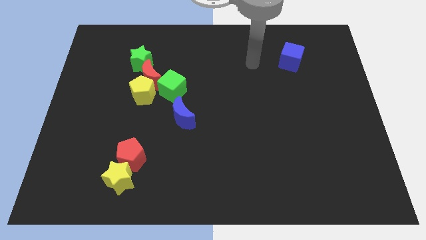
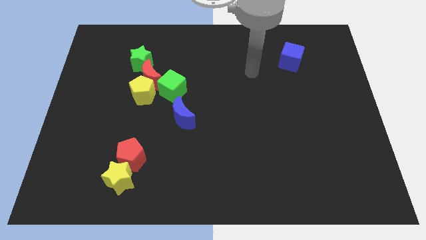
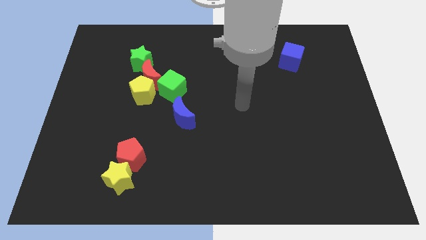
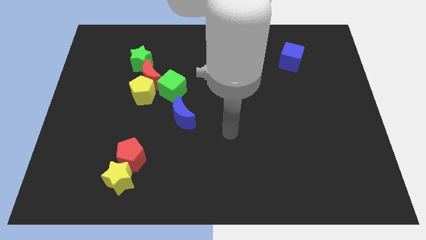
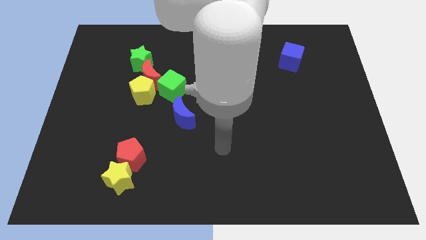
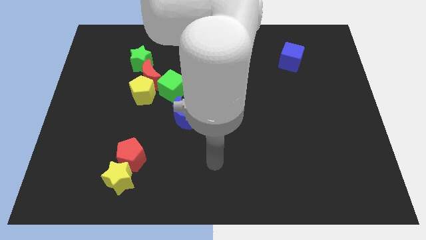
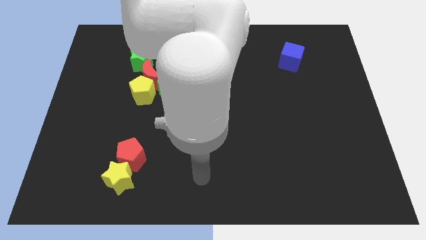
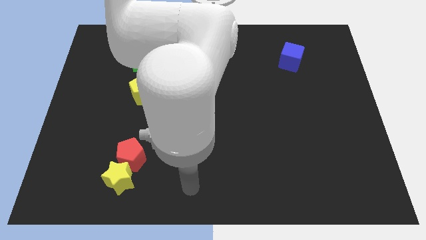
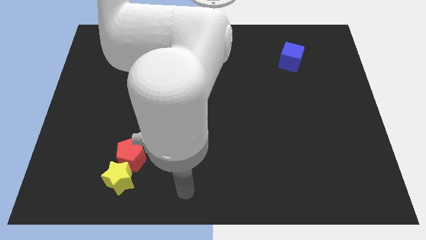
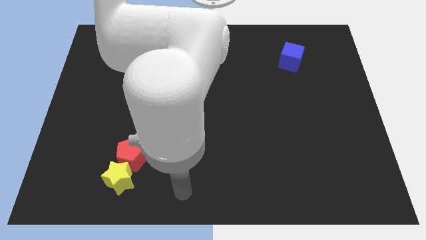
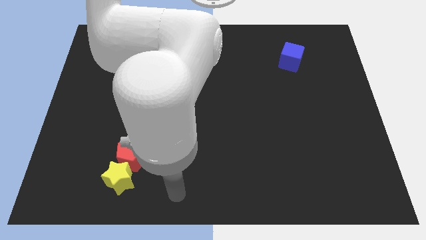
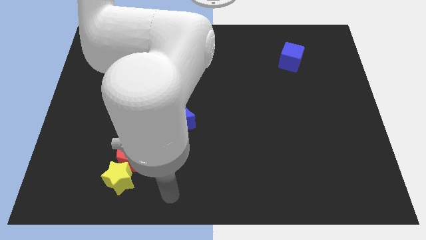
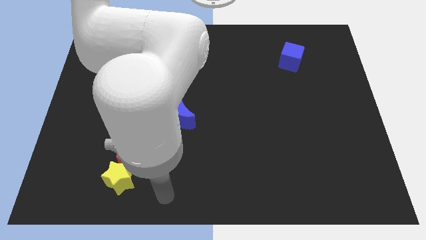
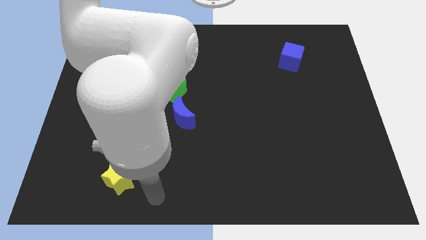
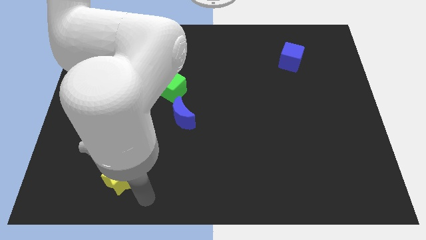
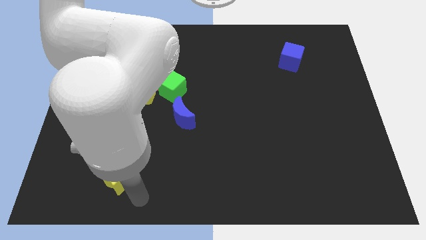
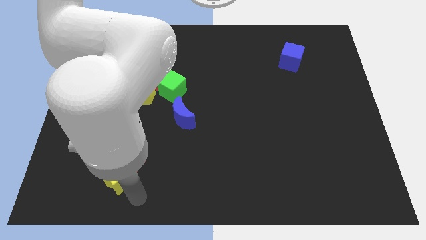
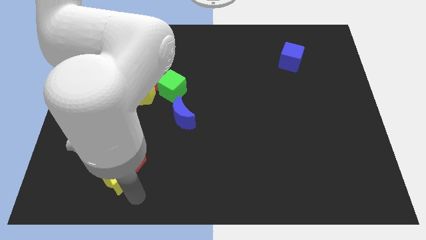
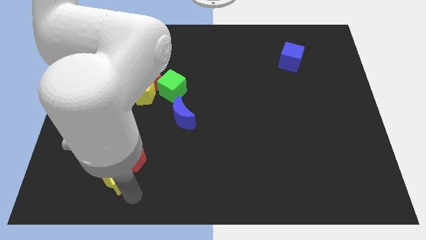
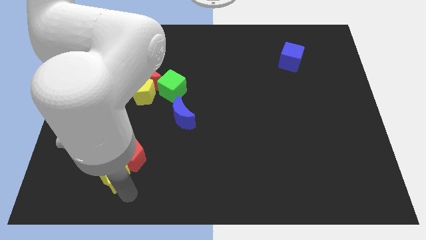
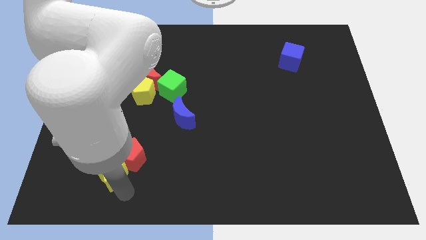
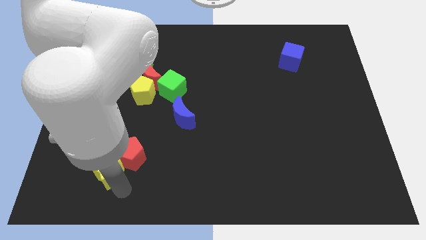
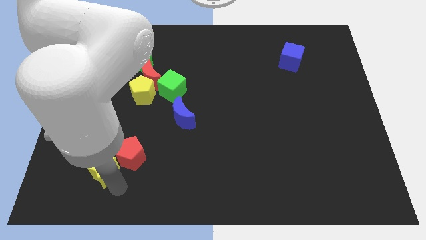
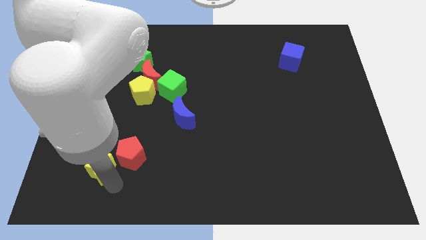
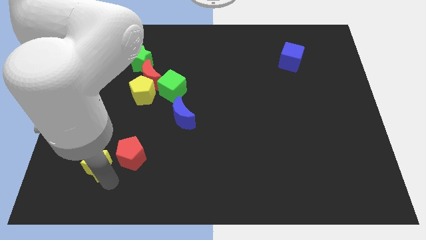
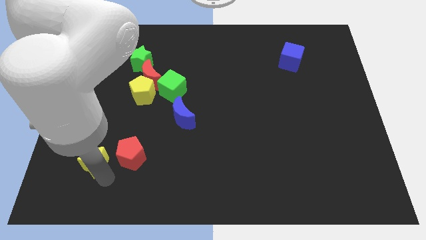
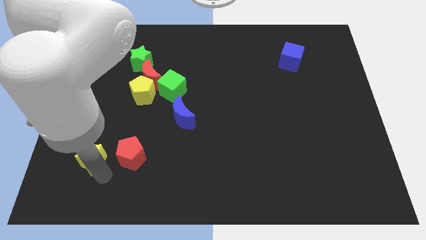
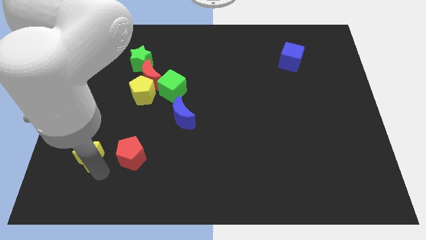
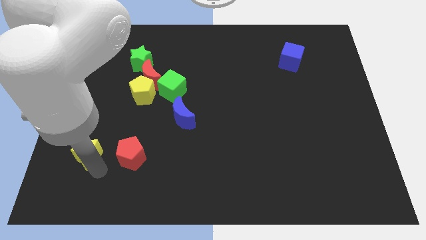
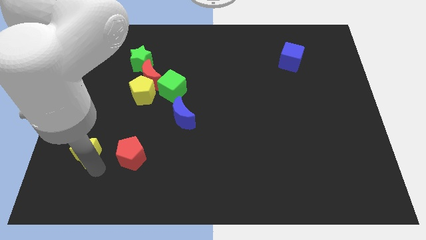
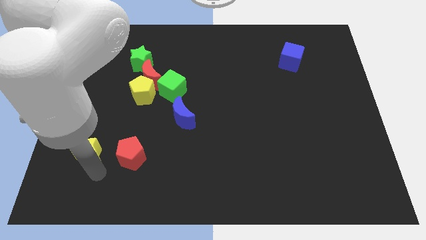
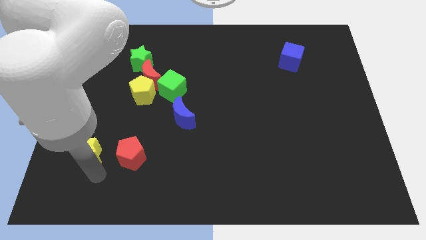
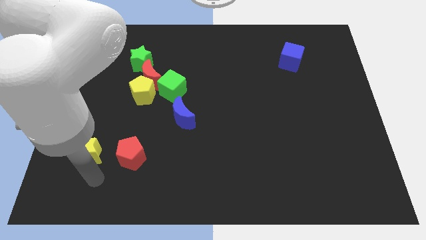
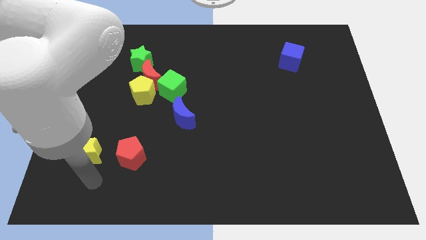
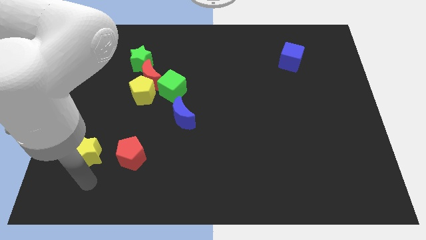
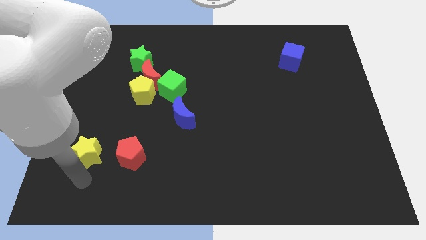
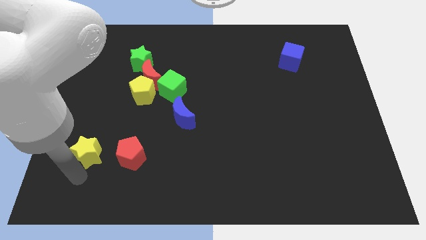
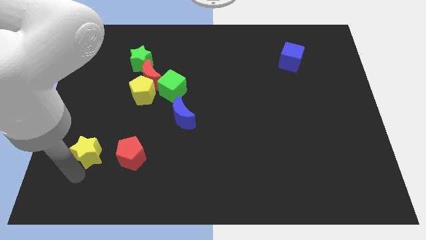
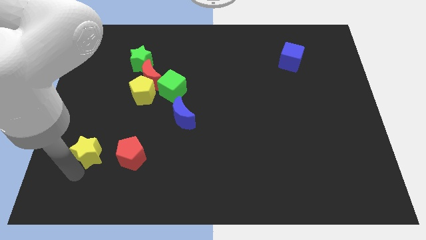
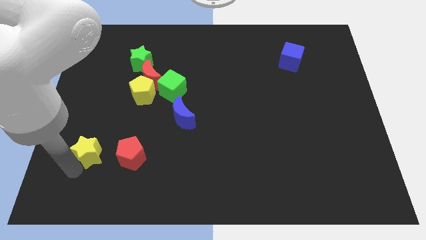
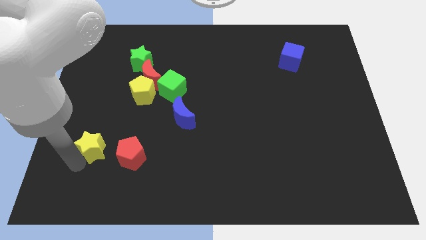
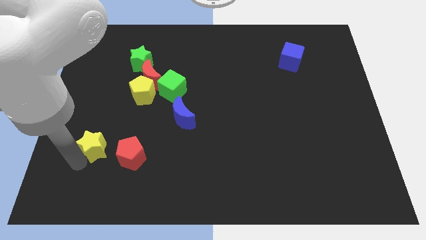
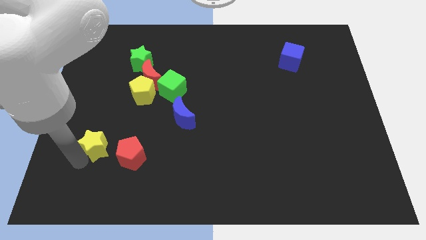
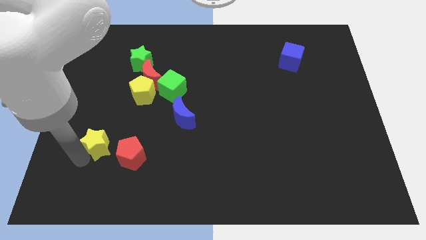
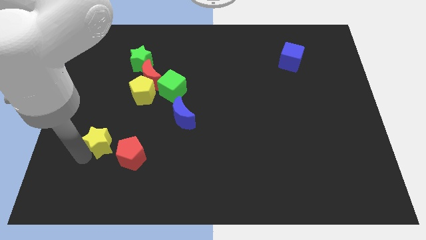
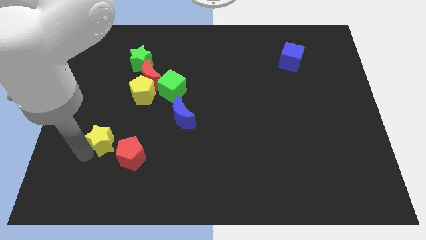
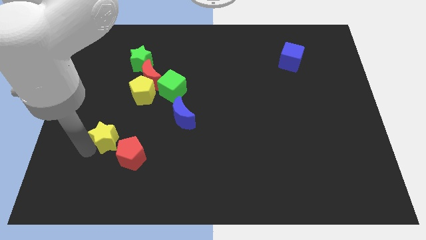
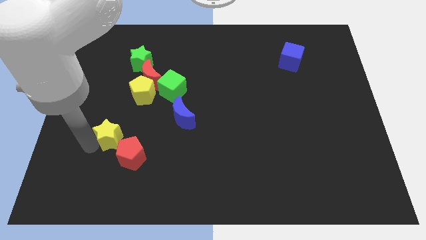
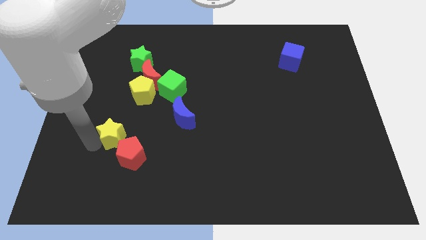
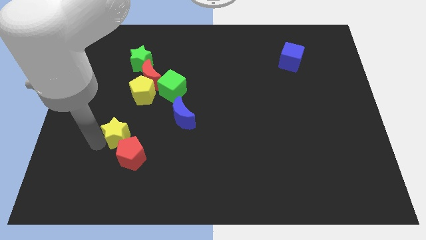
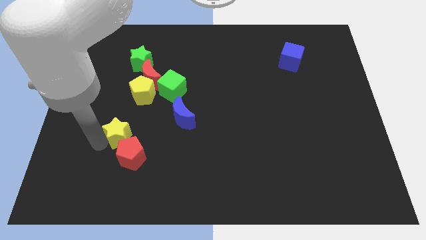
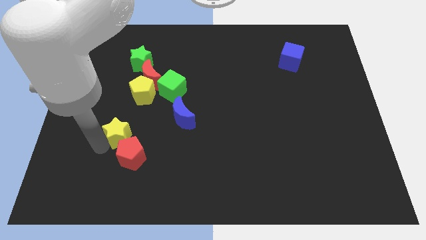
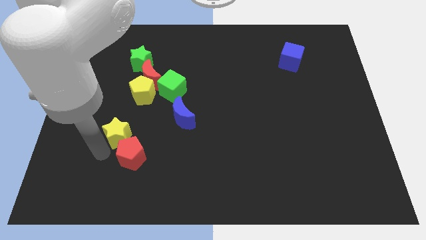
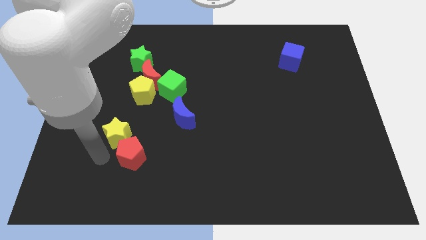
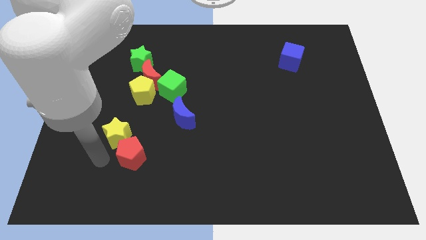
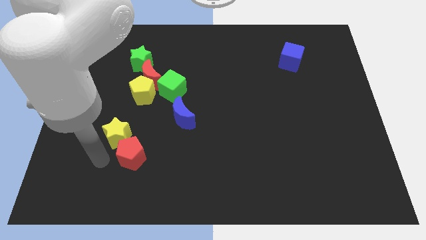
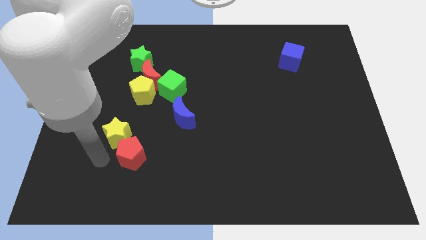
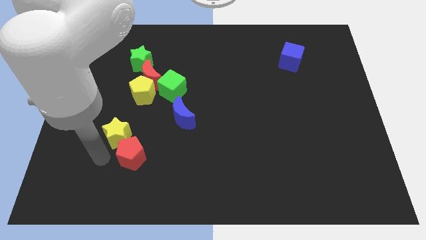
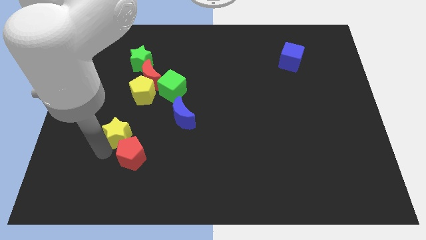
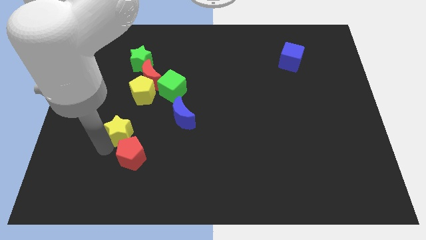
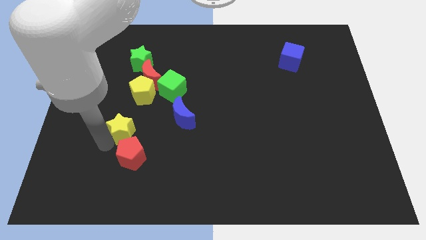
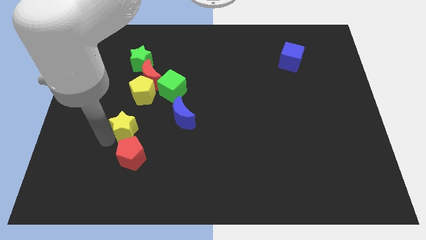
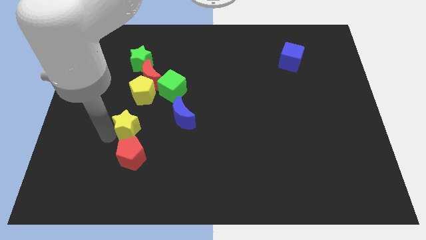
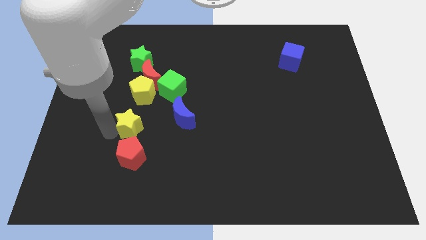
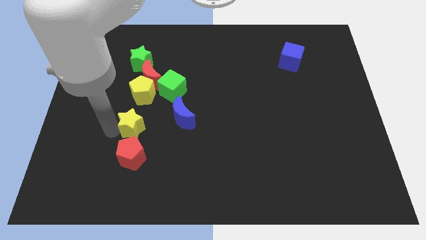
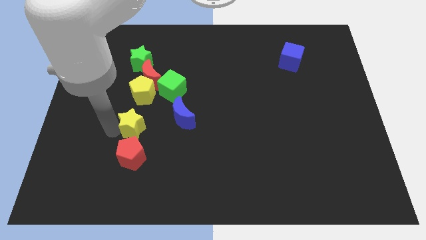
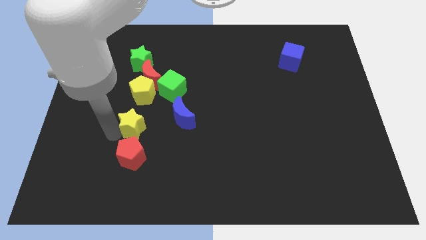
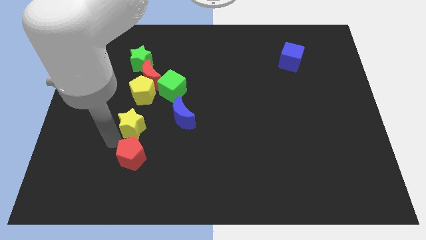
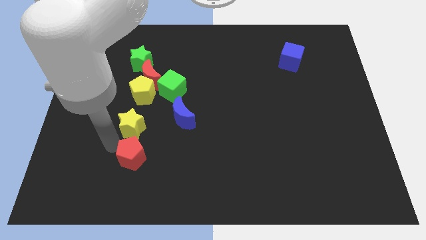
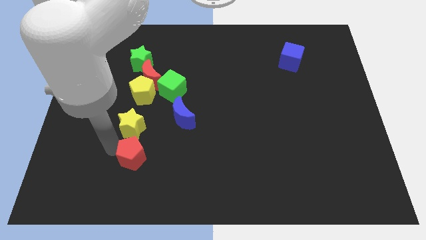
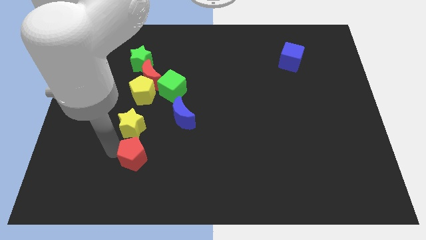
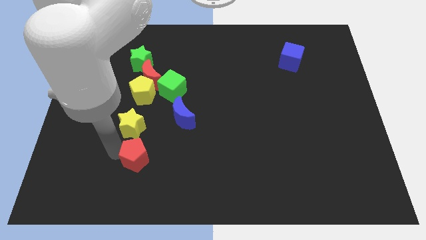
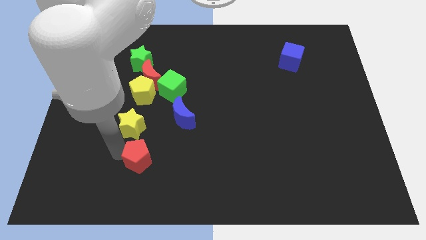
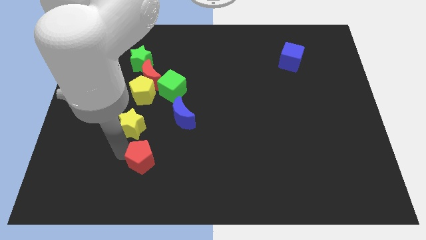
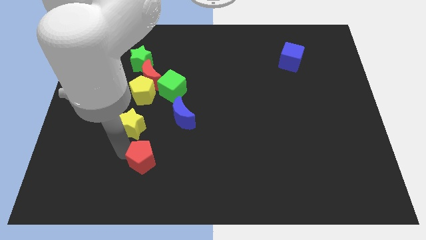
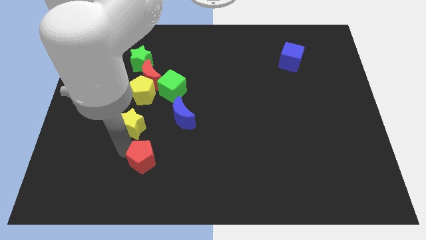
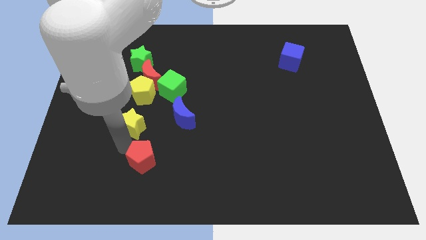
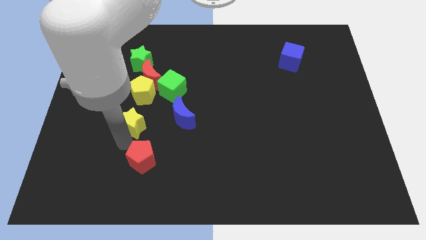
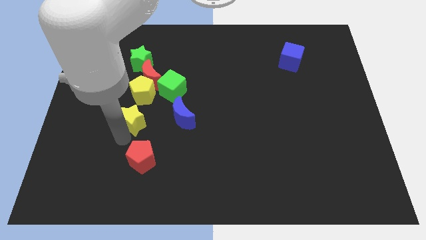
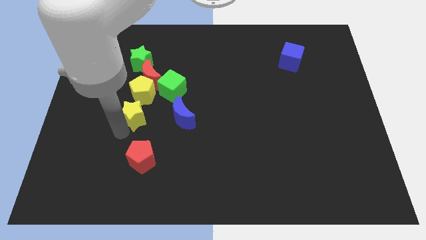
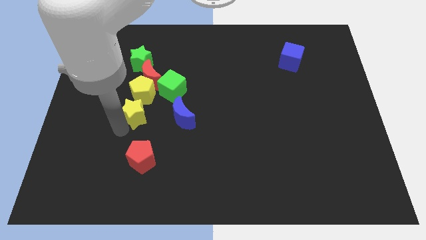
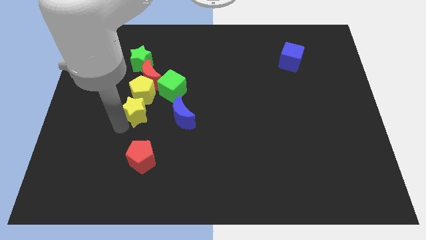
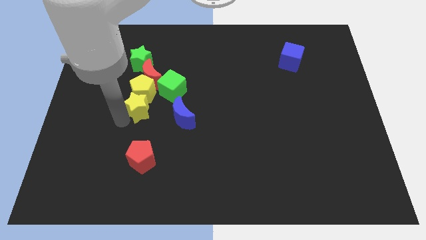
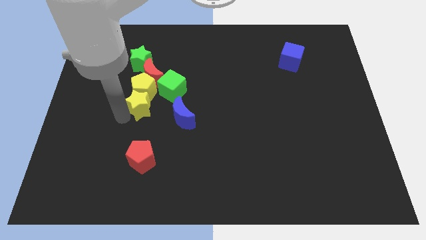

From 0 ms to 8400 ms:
push the yellow star to the yellow pentagon
